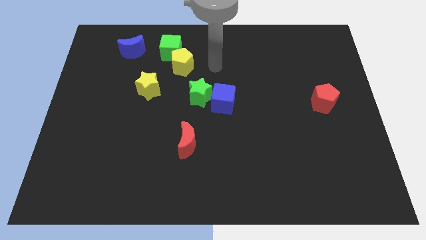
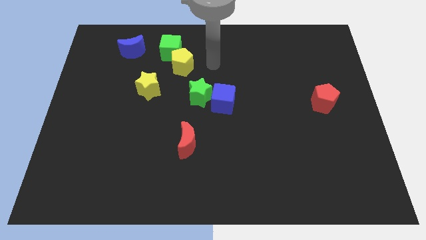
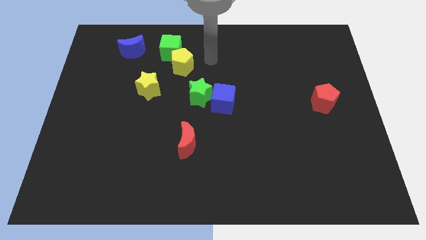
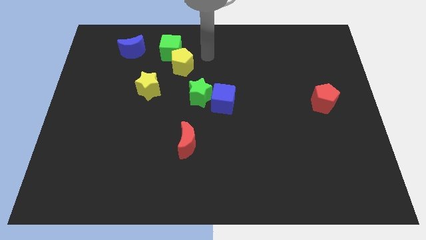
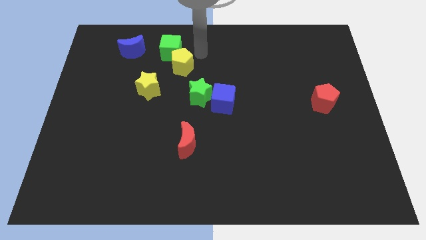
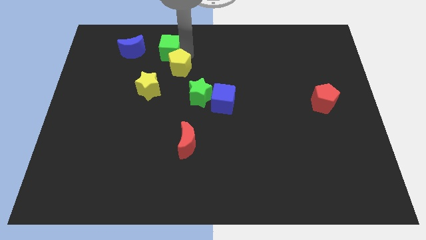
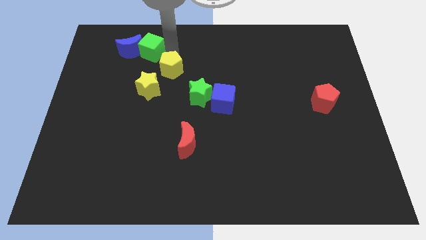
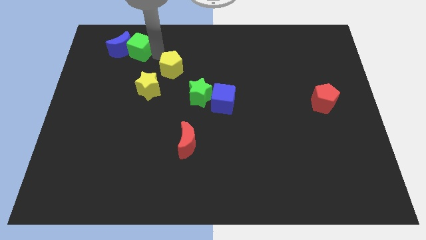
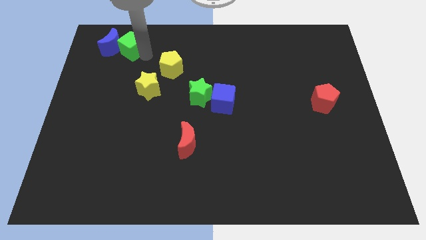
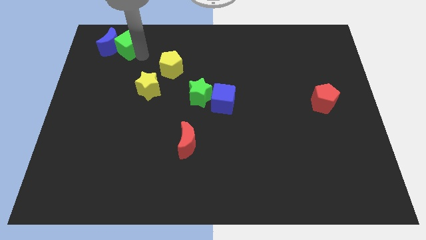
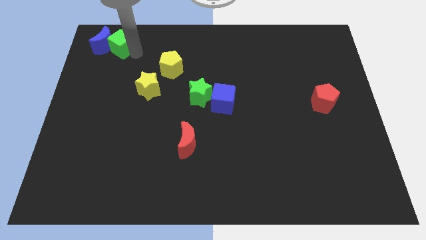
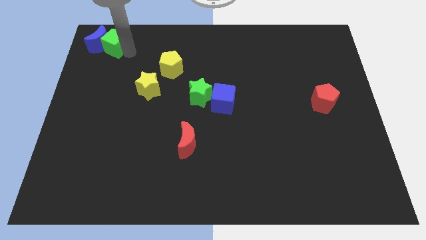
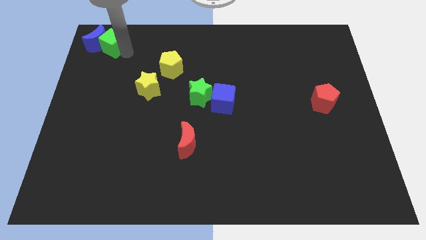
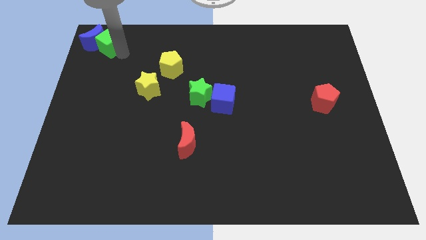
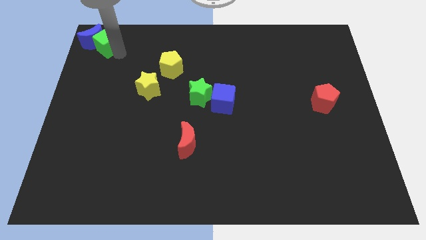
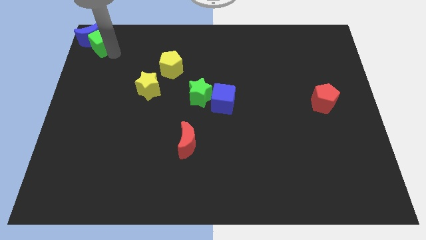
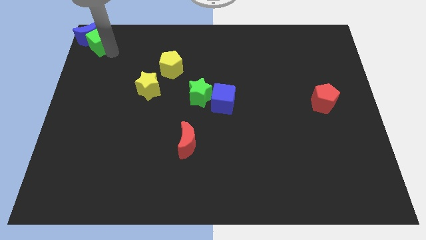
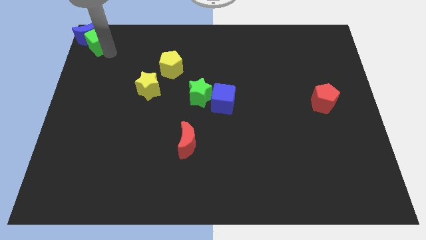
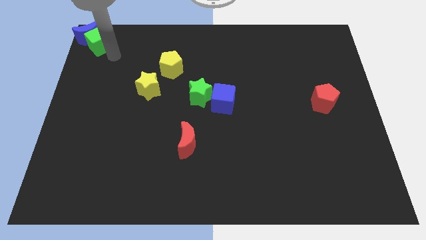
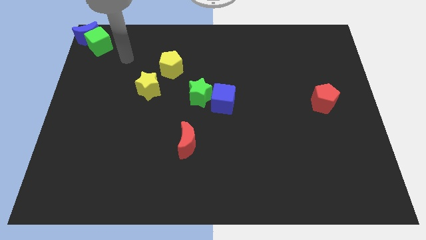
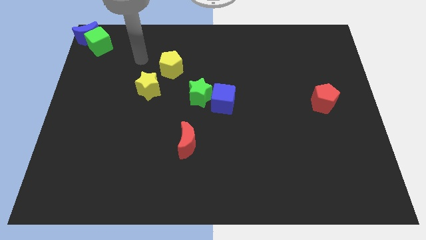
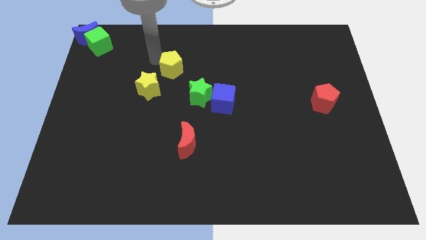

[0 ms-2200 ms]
separate the green cube and blue moon towards top left side

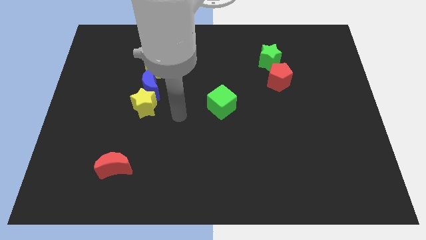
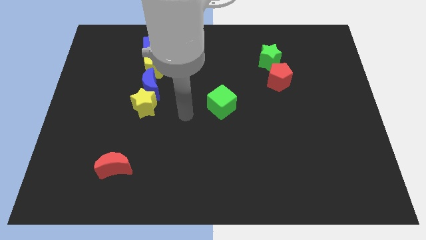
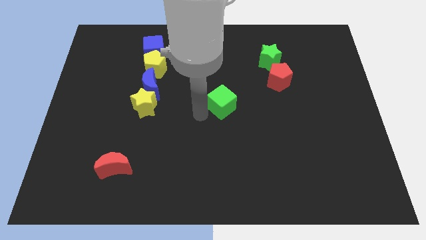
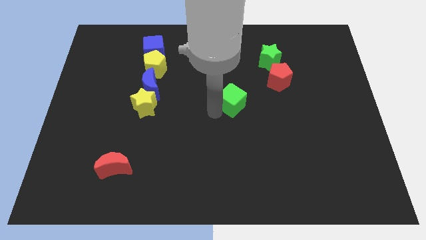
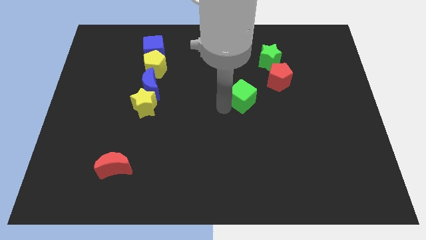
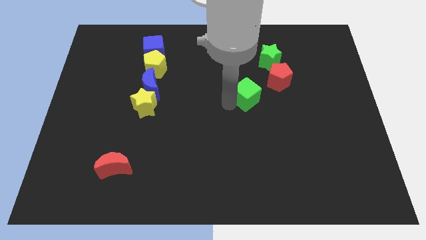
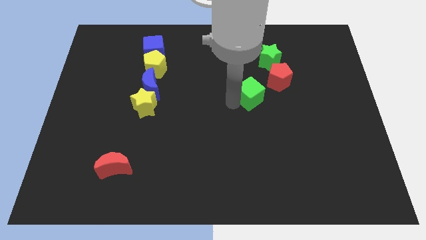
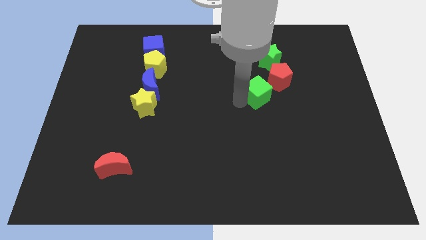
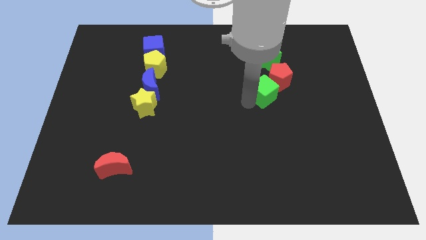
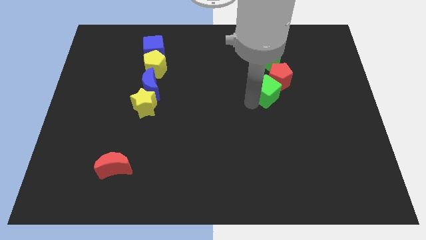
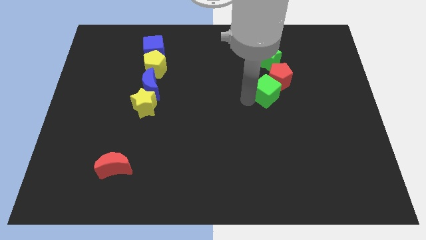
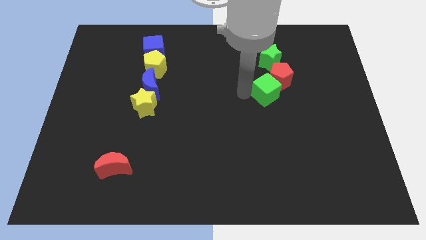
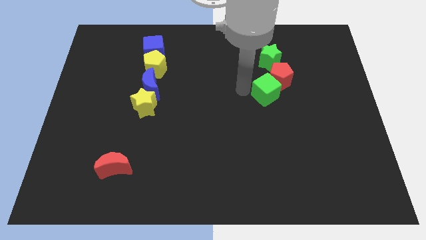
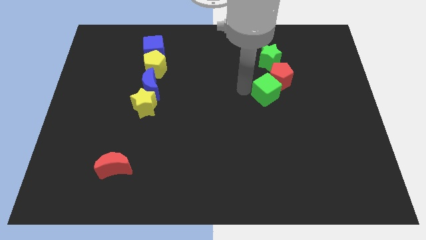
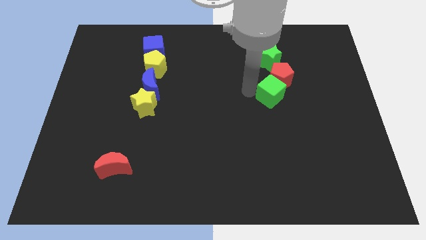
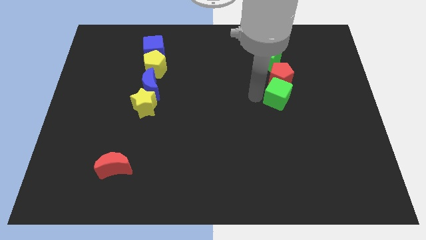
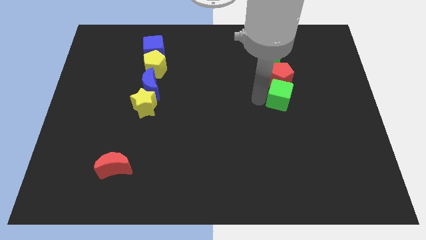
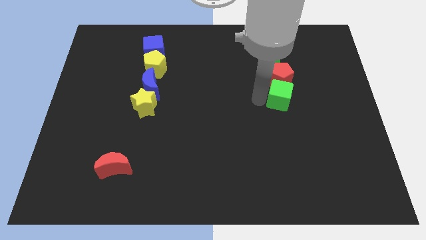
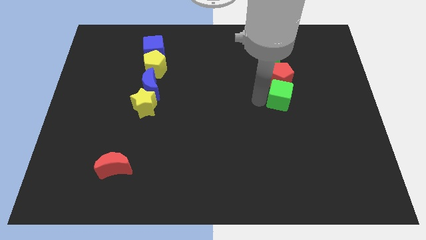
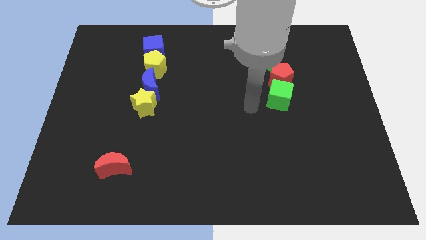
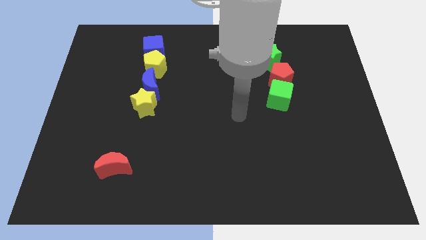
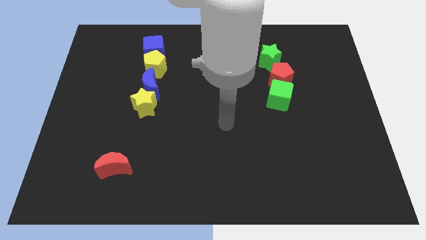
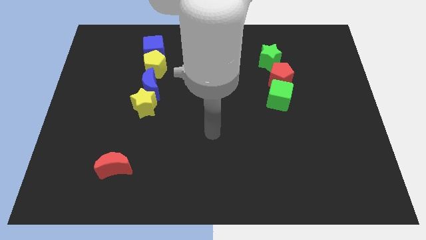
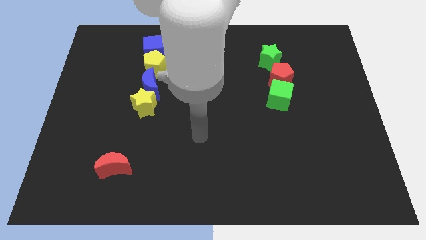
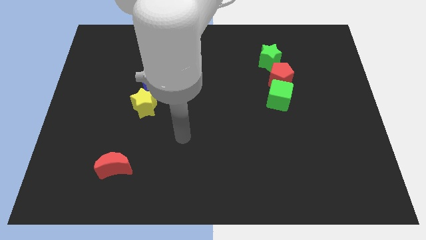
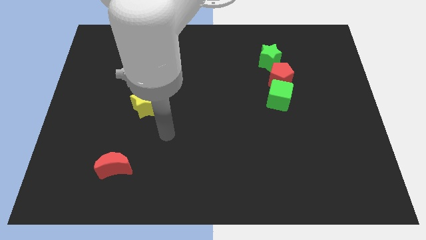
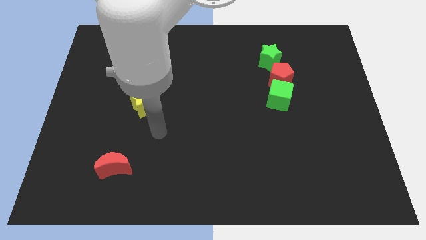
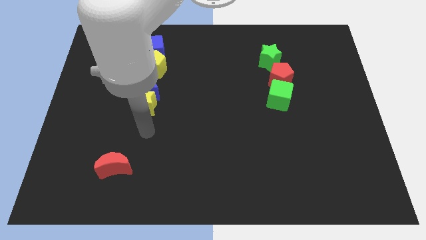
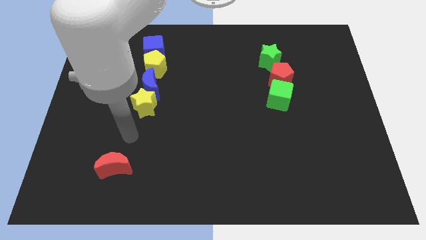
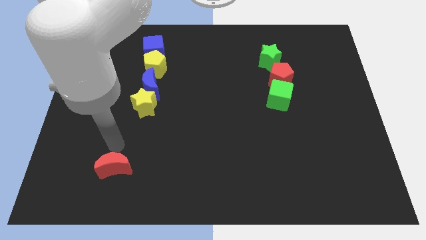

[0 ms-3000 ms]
move the green cube below the red pentagon

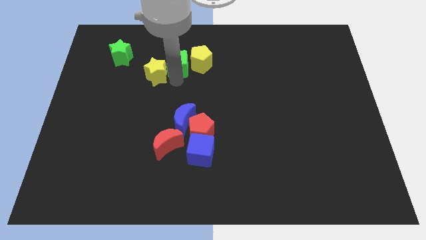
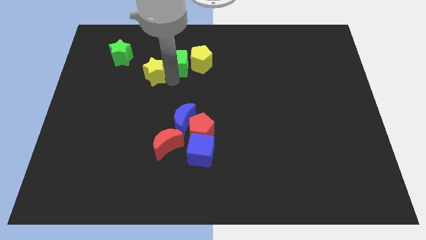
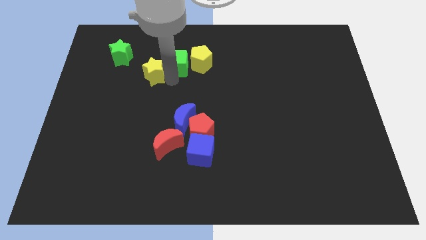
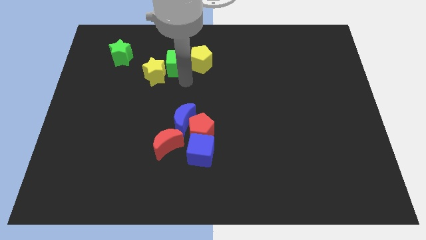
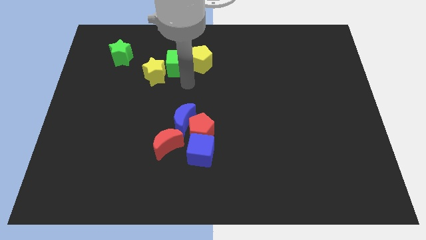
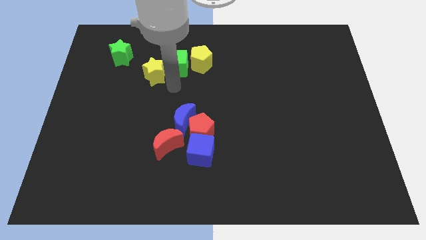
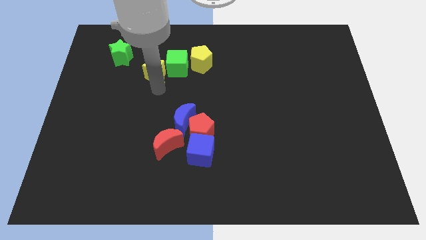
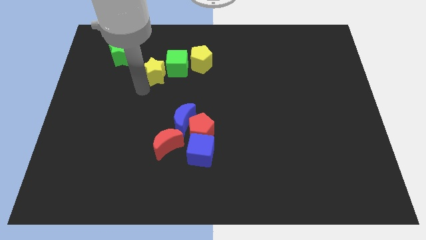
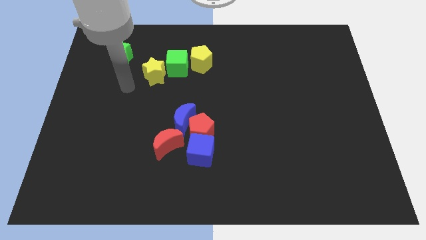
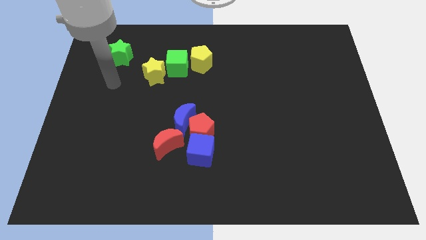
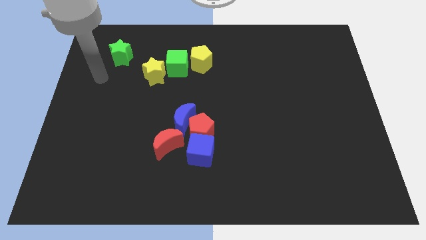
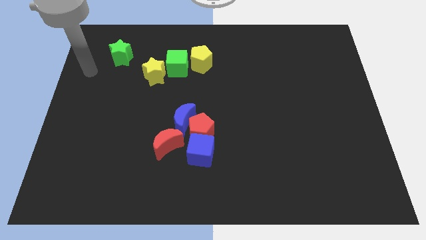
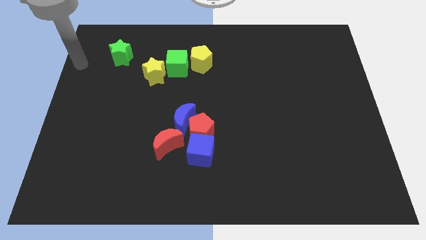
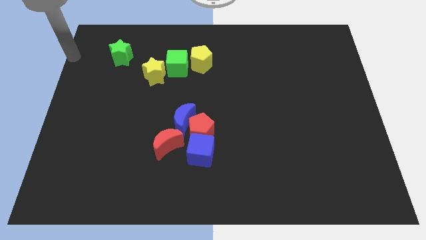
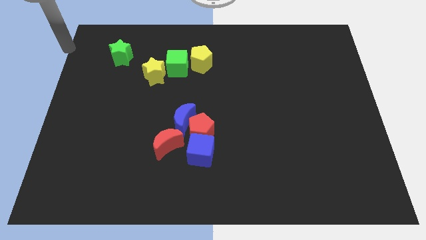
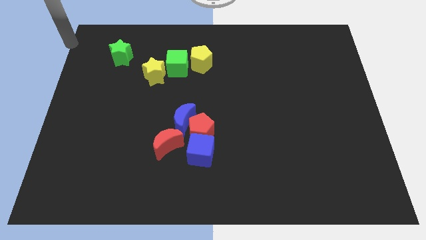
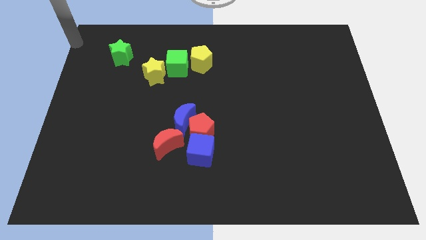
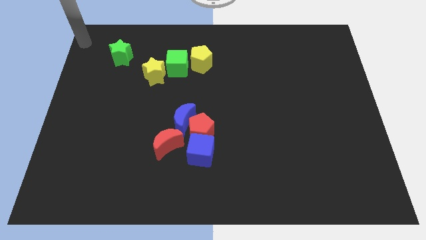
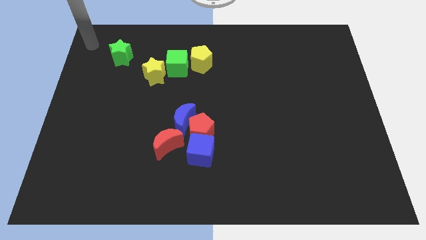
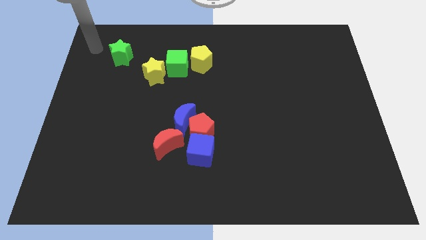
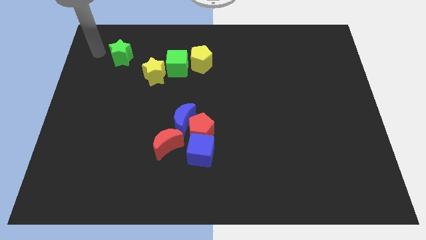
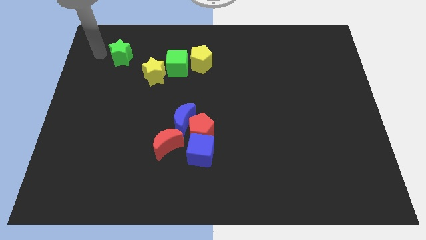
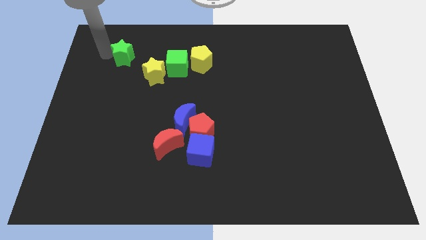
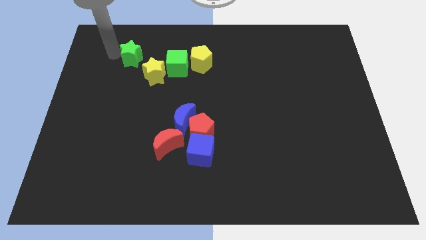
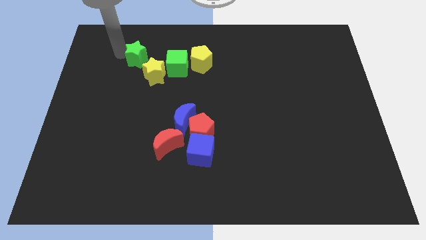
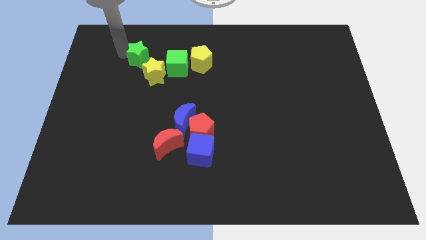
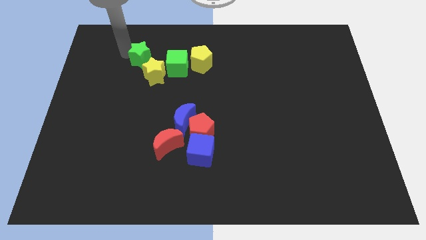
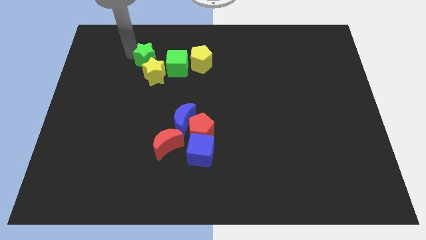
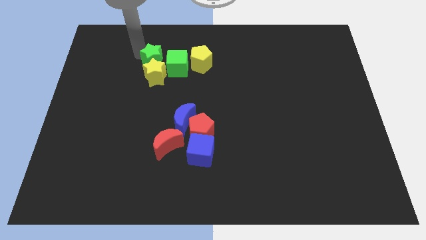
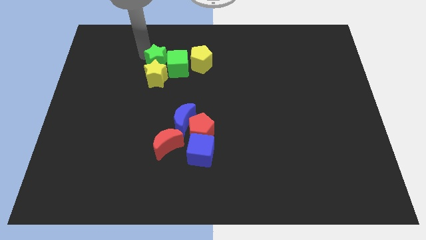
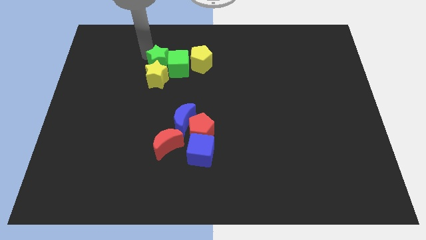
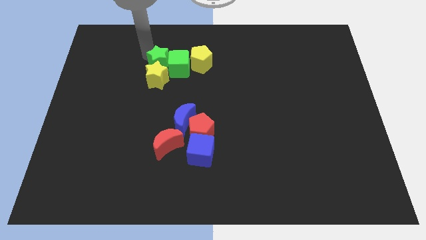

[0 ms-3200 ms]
push the green star into the group of blocks

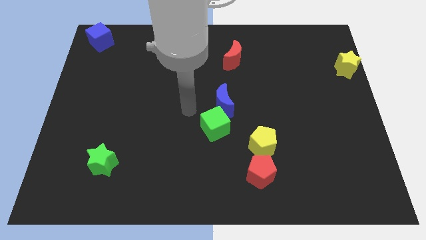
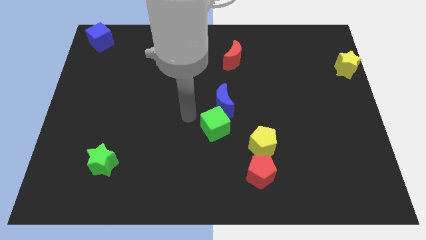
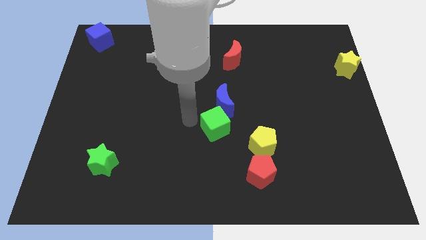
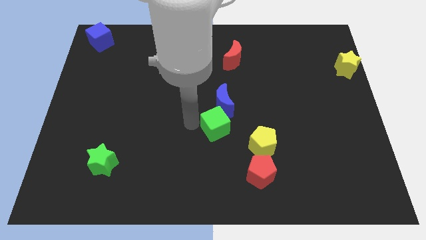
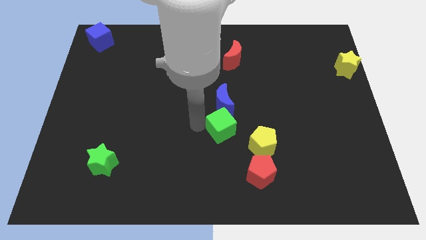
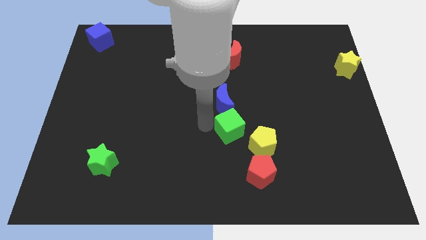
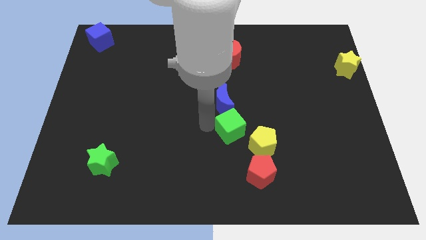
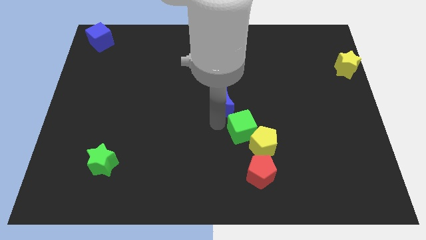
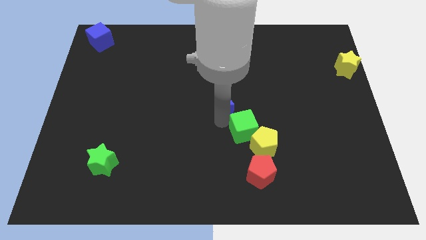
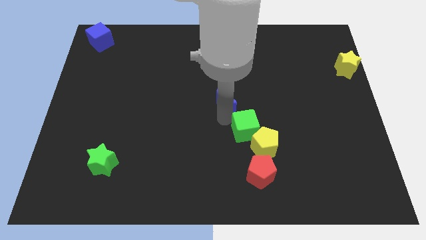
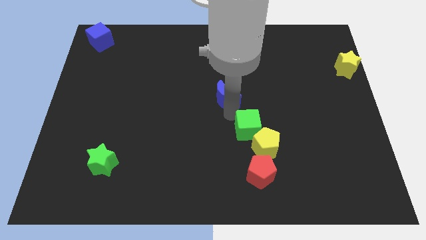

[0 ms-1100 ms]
move green cube into yellow pentagon
